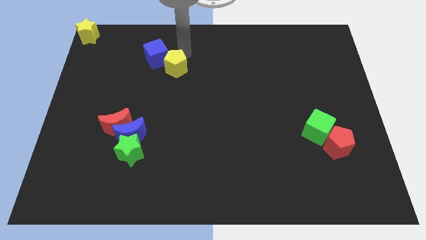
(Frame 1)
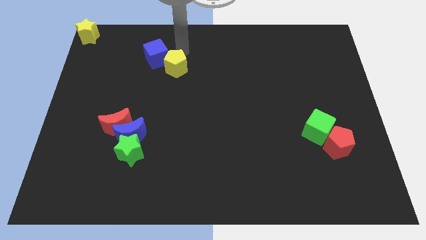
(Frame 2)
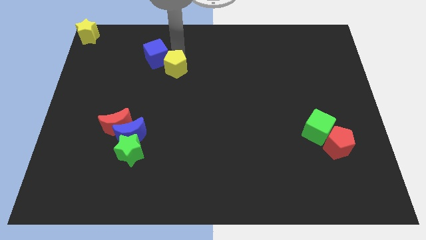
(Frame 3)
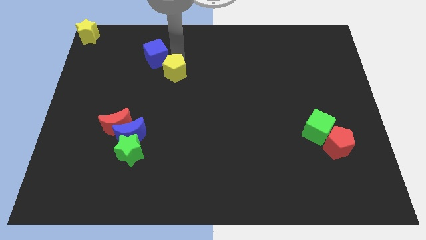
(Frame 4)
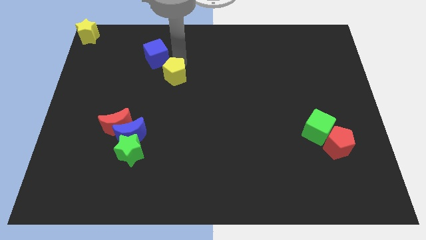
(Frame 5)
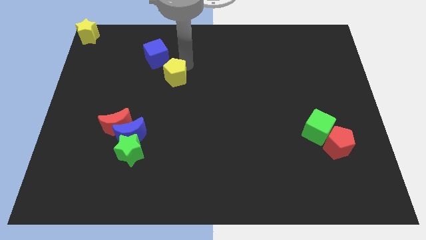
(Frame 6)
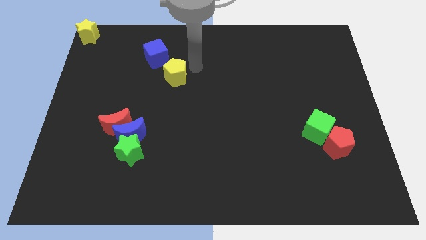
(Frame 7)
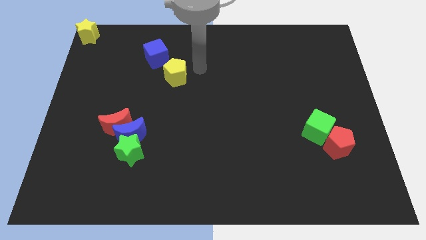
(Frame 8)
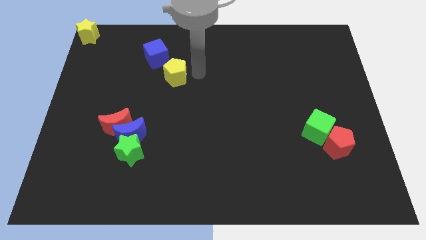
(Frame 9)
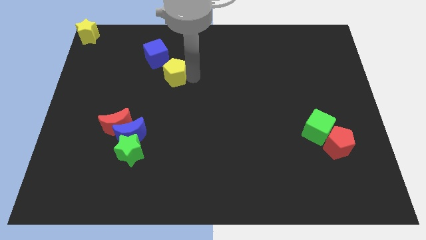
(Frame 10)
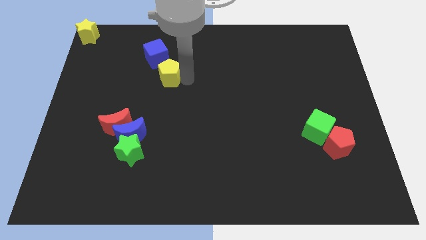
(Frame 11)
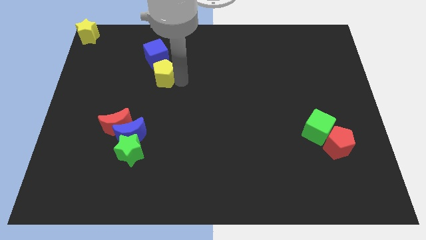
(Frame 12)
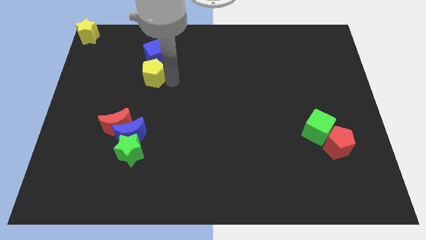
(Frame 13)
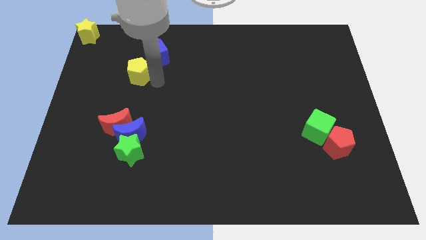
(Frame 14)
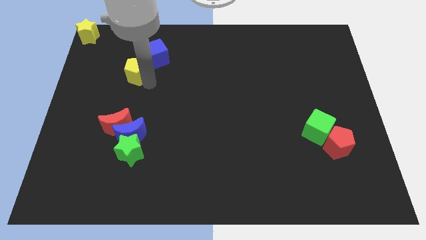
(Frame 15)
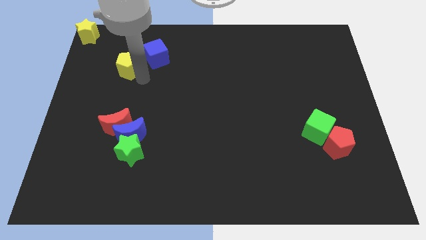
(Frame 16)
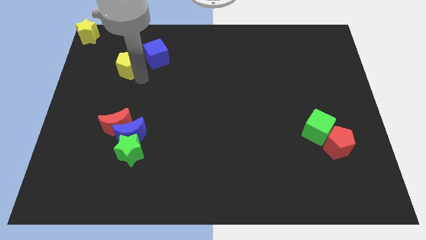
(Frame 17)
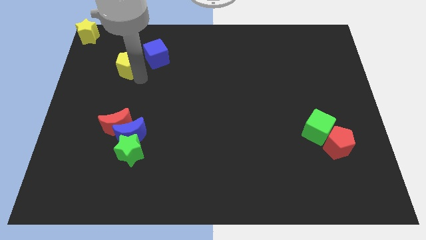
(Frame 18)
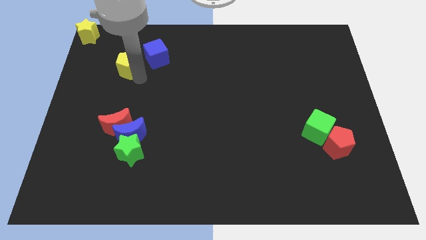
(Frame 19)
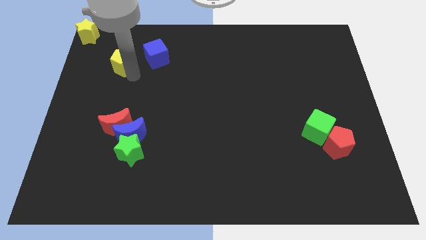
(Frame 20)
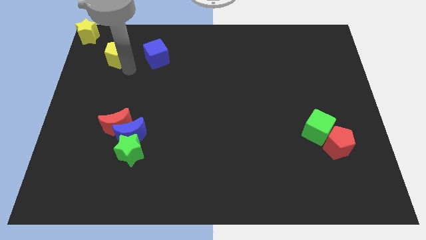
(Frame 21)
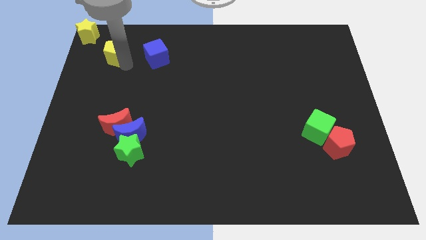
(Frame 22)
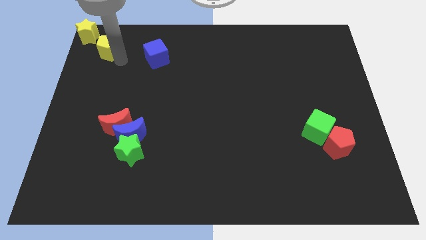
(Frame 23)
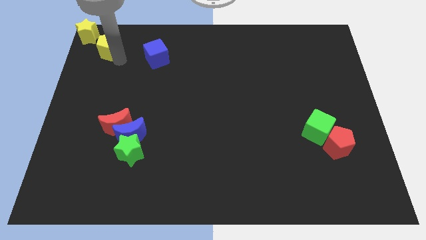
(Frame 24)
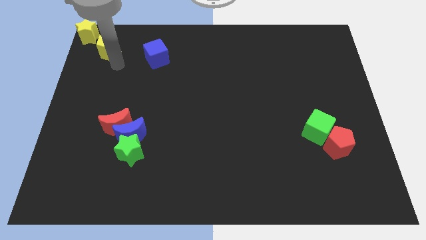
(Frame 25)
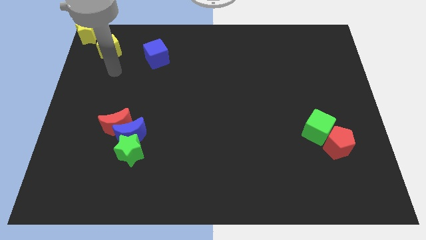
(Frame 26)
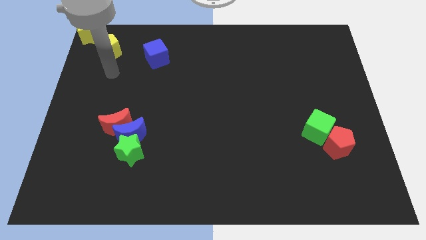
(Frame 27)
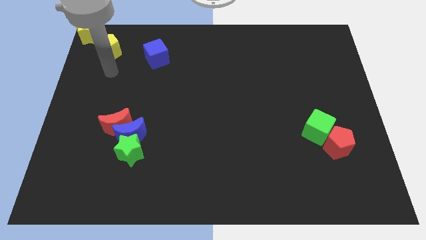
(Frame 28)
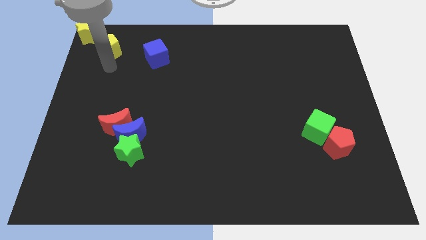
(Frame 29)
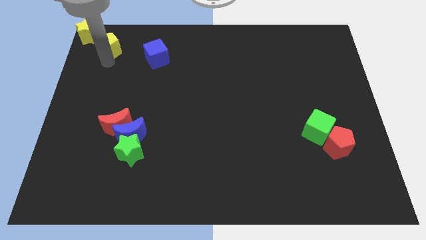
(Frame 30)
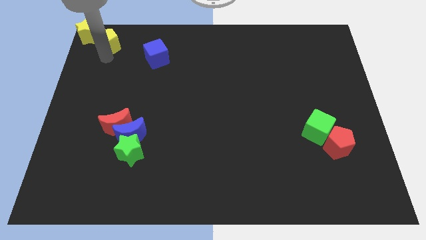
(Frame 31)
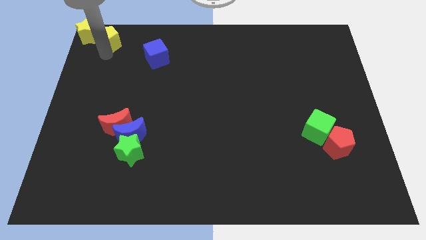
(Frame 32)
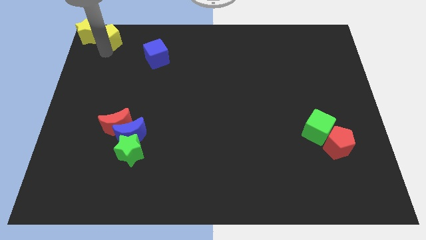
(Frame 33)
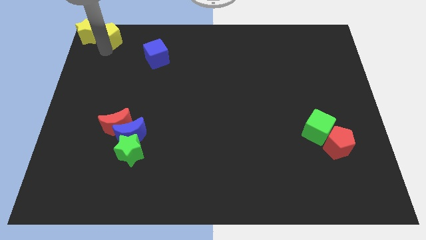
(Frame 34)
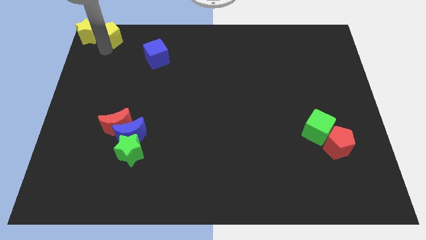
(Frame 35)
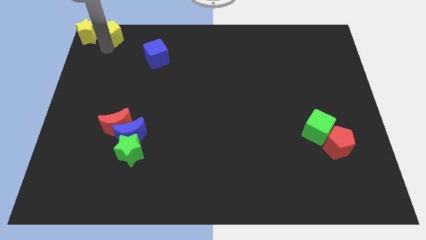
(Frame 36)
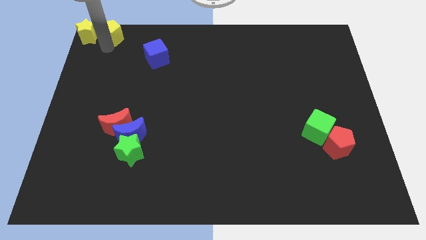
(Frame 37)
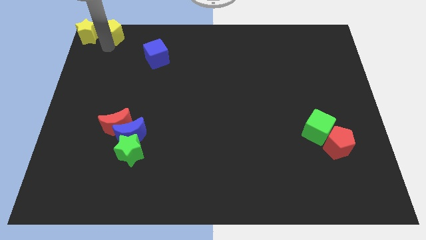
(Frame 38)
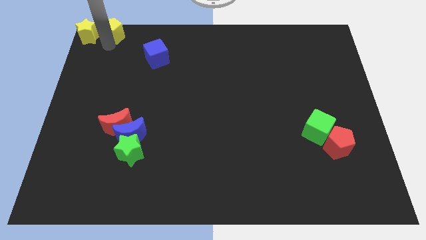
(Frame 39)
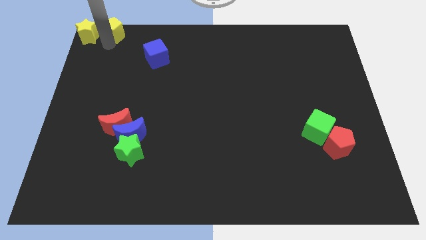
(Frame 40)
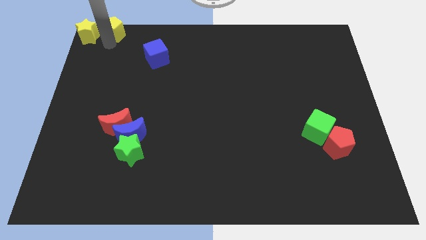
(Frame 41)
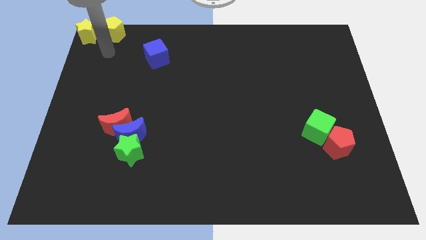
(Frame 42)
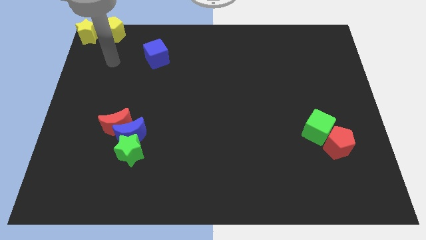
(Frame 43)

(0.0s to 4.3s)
separate the yellow pentagon from blue cube

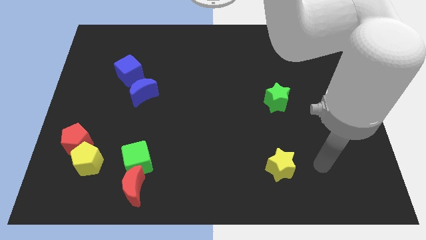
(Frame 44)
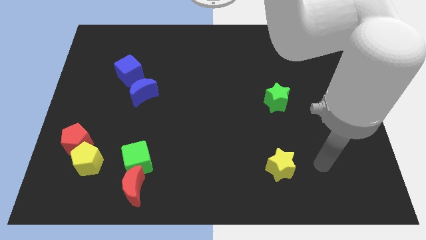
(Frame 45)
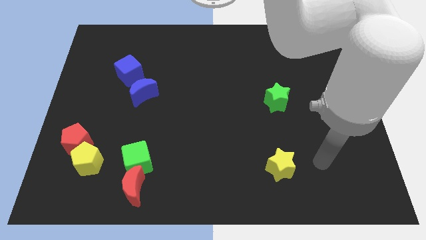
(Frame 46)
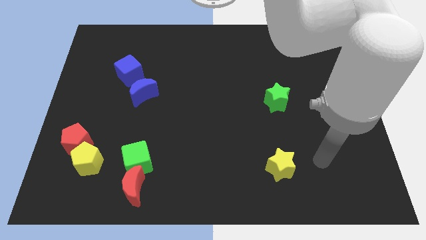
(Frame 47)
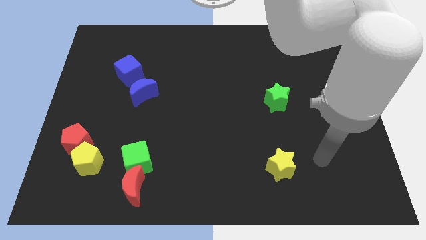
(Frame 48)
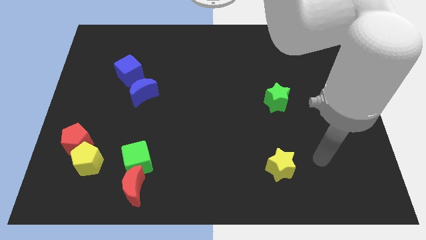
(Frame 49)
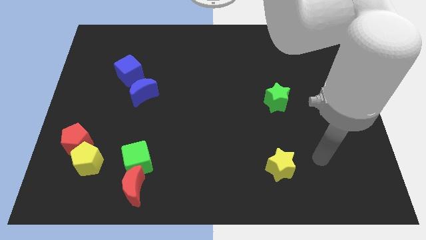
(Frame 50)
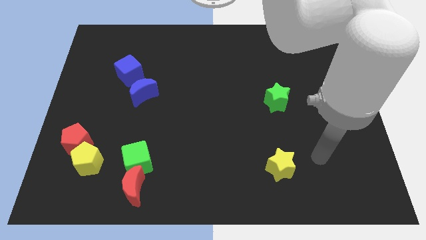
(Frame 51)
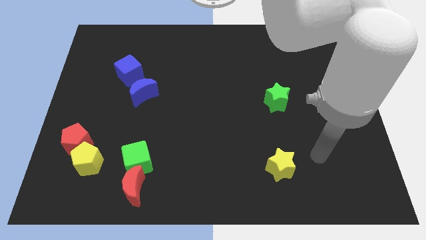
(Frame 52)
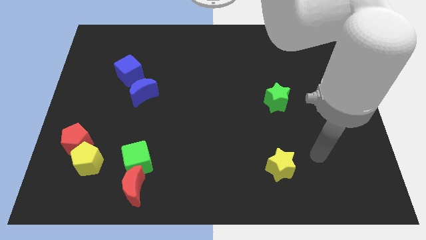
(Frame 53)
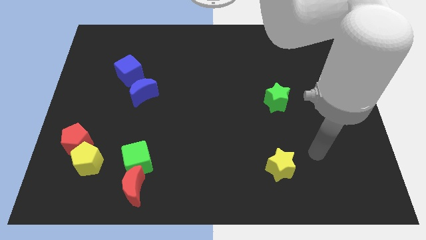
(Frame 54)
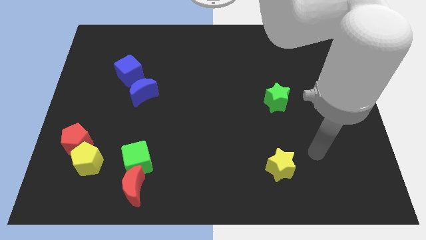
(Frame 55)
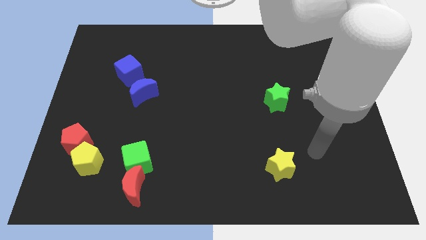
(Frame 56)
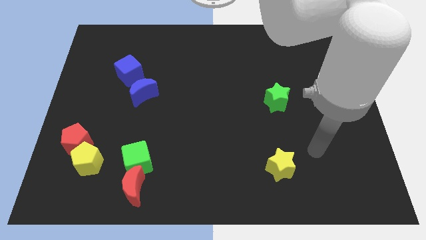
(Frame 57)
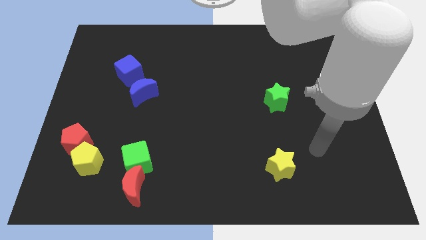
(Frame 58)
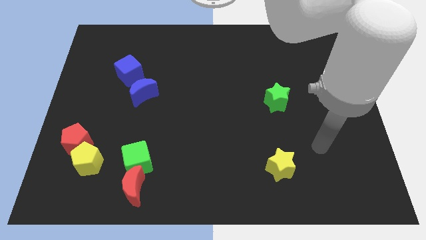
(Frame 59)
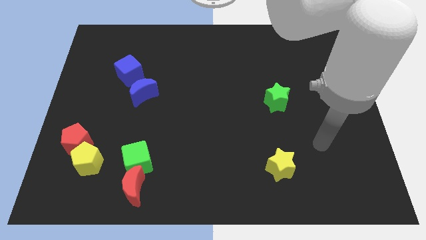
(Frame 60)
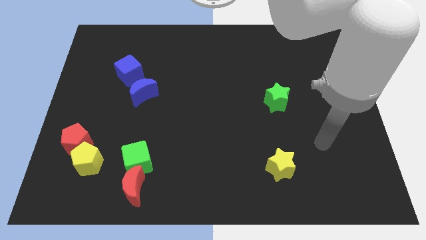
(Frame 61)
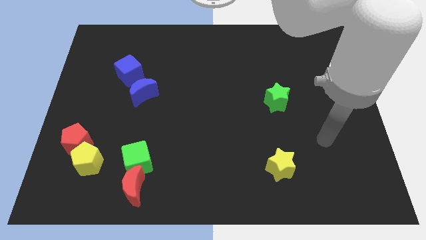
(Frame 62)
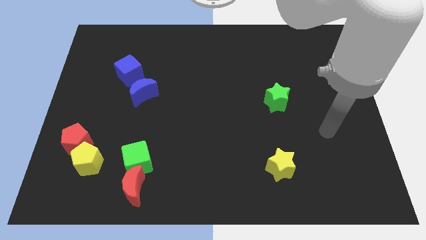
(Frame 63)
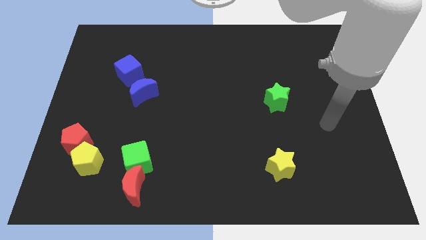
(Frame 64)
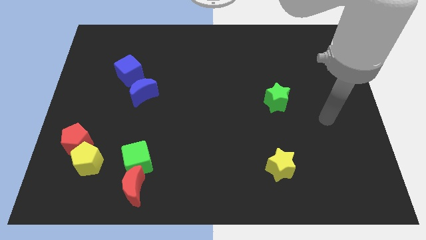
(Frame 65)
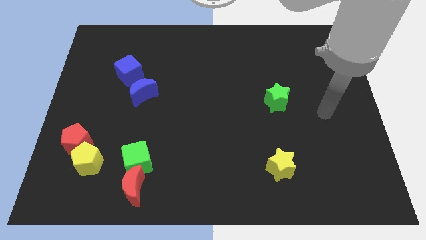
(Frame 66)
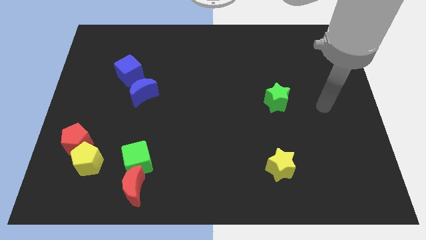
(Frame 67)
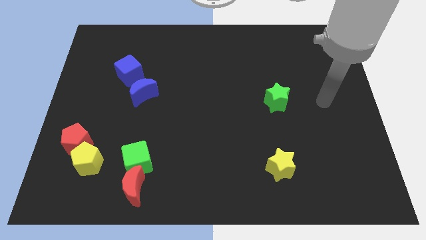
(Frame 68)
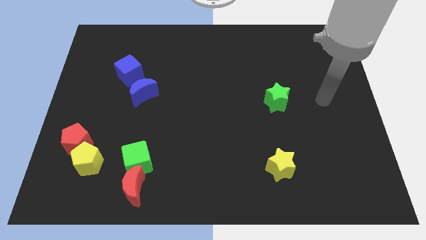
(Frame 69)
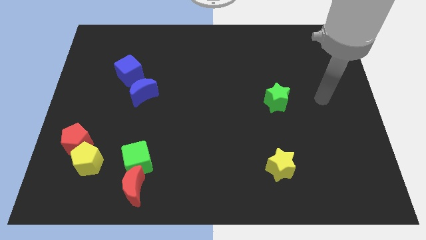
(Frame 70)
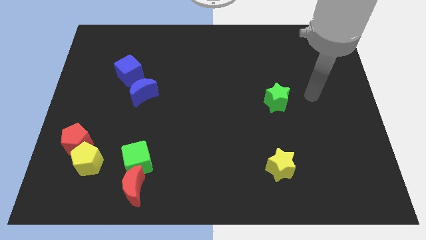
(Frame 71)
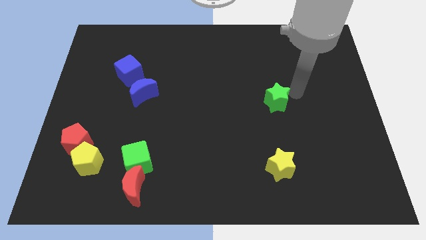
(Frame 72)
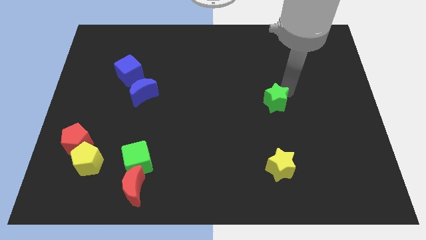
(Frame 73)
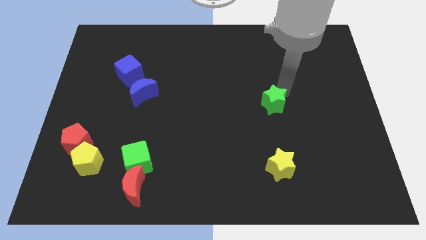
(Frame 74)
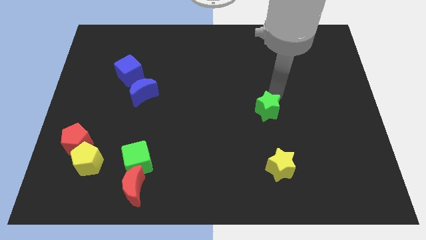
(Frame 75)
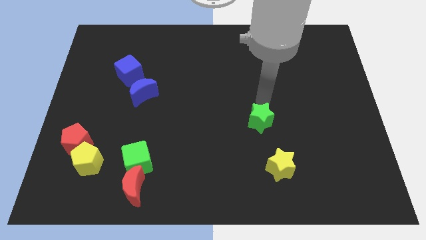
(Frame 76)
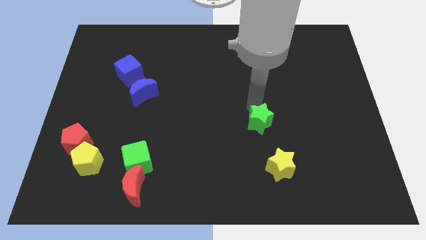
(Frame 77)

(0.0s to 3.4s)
push the green star towards the yellow star

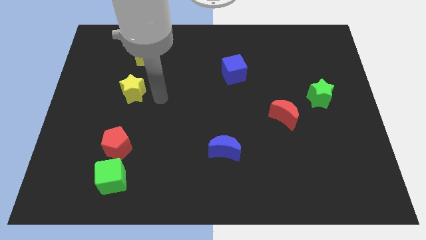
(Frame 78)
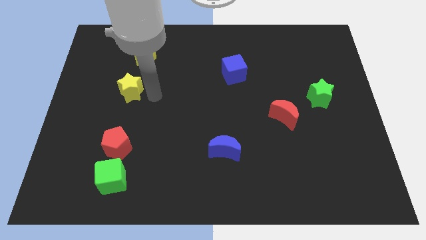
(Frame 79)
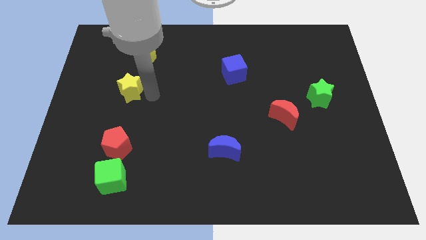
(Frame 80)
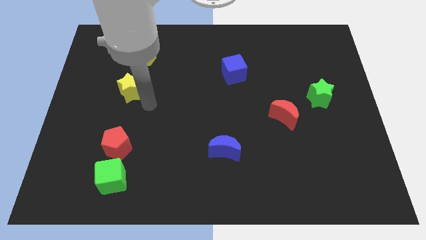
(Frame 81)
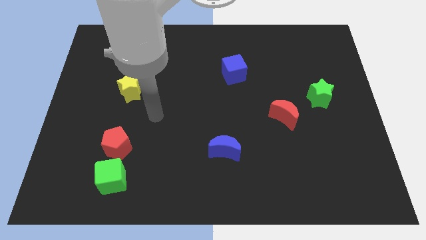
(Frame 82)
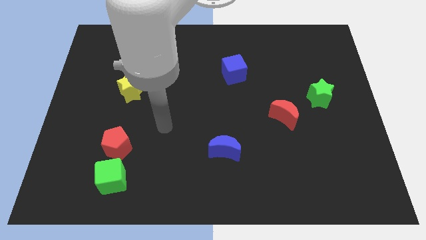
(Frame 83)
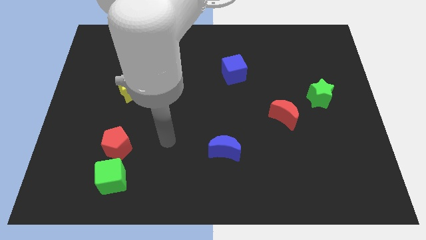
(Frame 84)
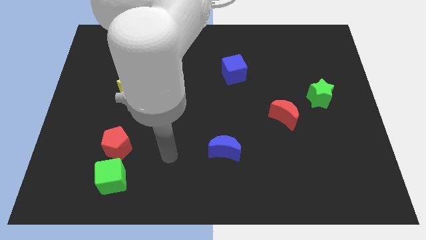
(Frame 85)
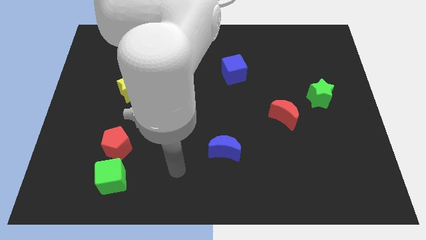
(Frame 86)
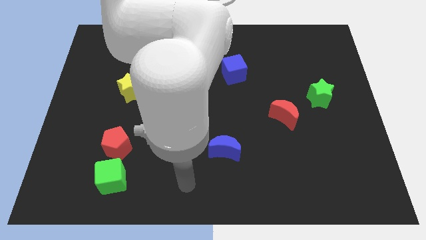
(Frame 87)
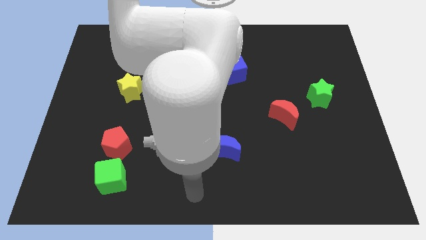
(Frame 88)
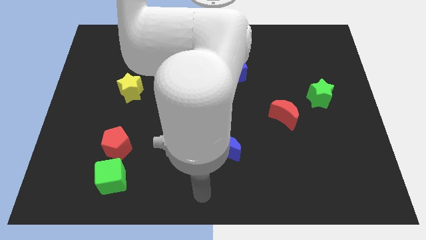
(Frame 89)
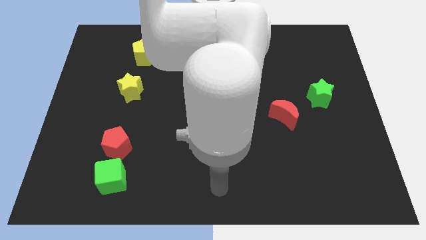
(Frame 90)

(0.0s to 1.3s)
move the pointer to the bottom center of the board
